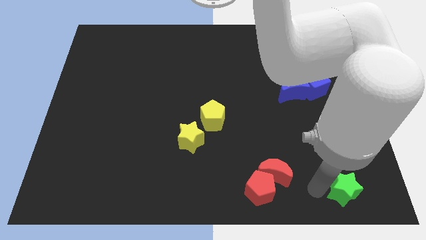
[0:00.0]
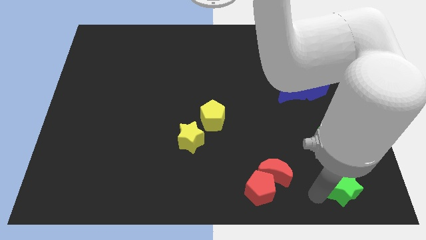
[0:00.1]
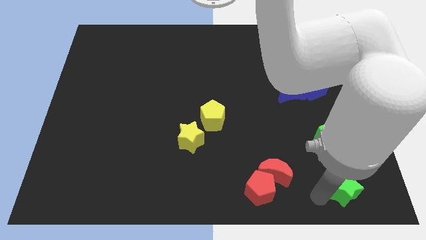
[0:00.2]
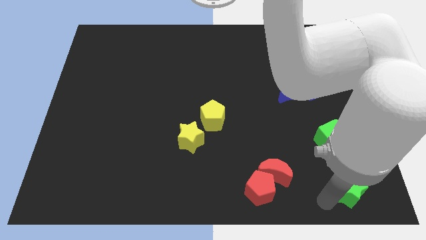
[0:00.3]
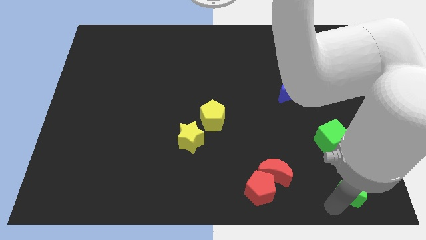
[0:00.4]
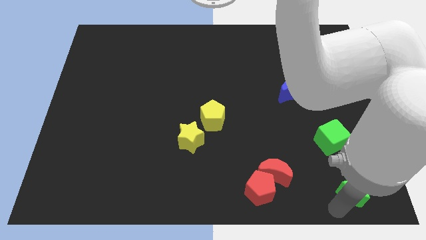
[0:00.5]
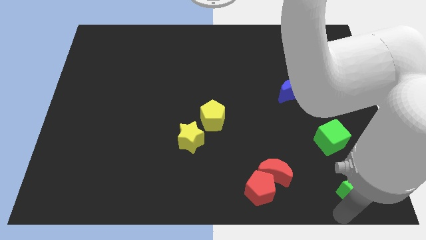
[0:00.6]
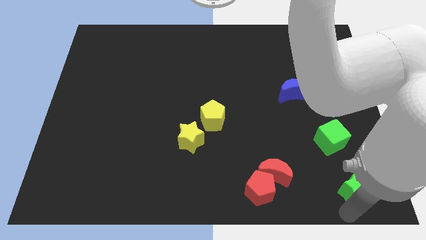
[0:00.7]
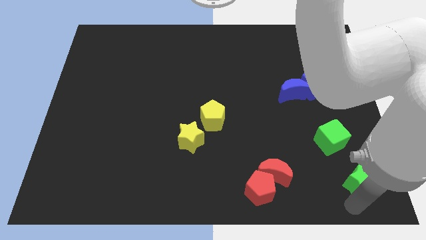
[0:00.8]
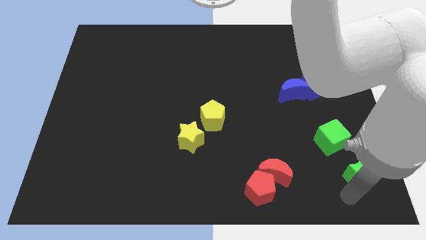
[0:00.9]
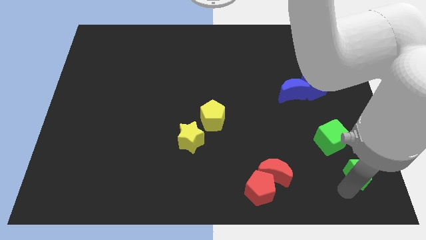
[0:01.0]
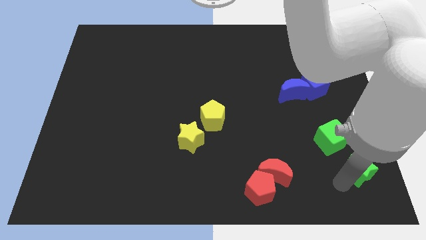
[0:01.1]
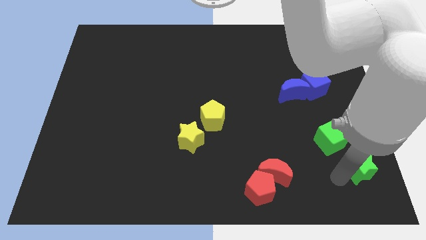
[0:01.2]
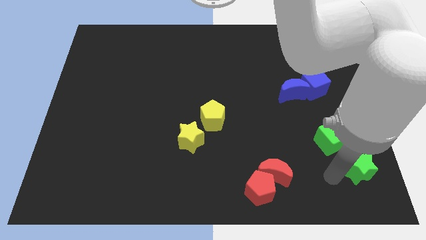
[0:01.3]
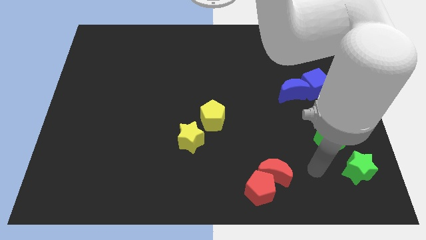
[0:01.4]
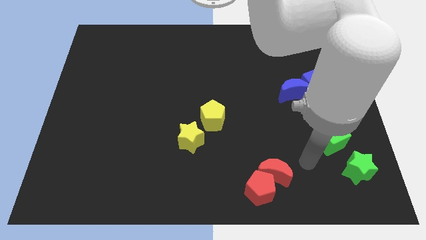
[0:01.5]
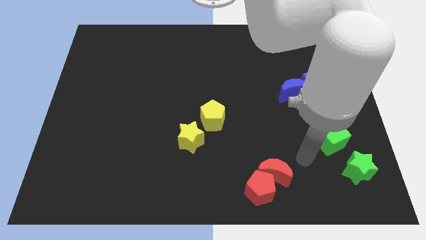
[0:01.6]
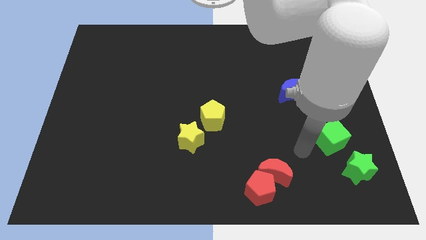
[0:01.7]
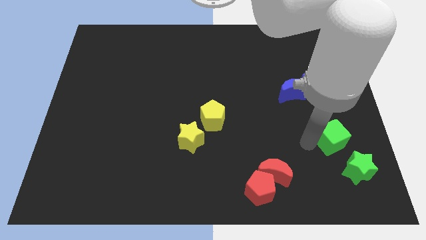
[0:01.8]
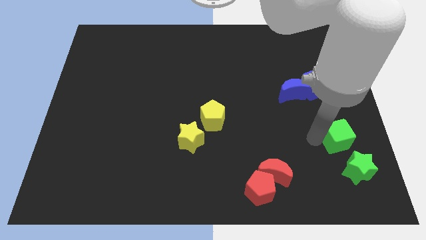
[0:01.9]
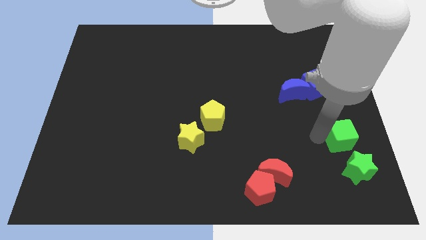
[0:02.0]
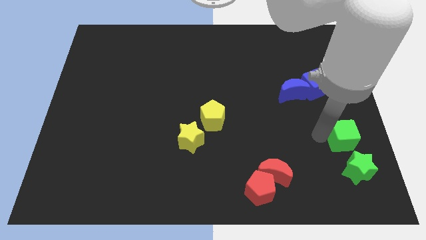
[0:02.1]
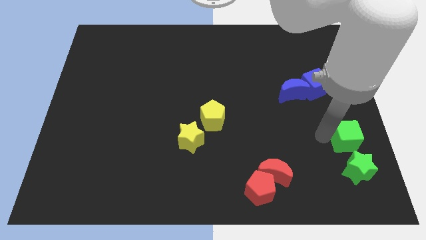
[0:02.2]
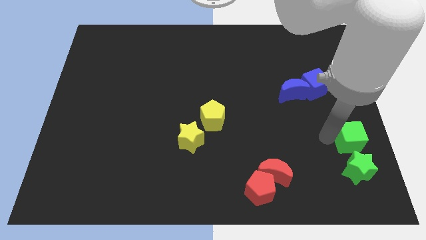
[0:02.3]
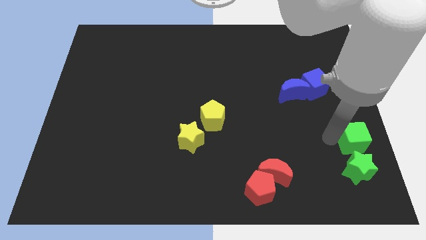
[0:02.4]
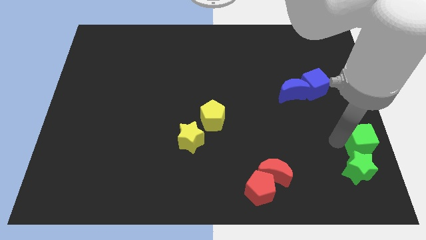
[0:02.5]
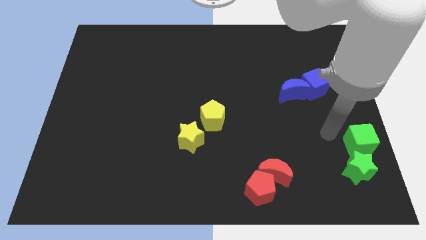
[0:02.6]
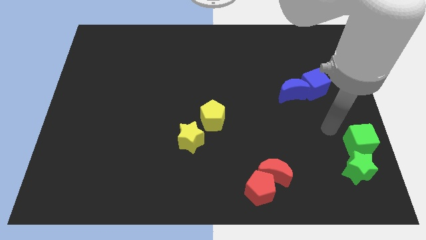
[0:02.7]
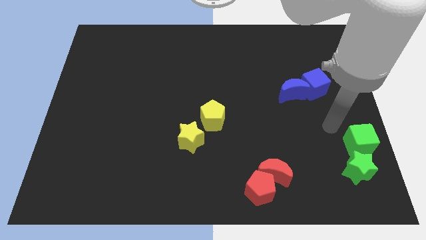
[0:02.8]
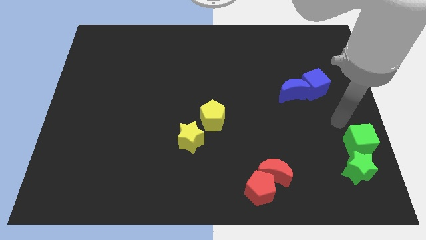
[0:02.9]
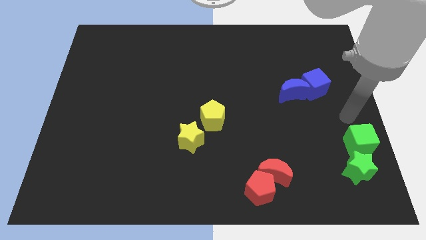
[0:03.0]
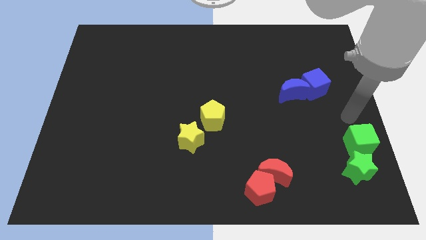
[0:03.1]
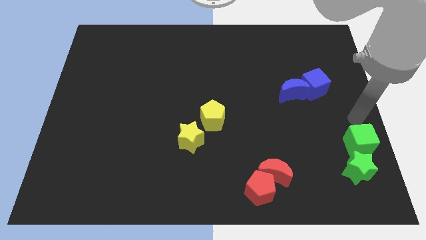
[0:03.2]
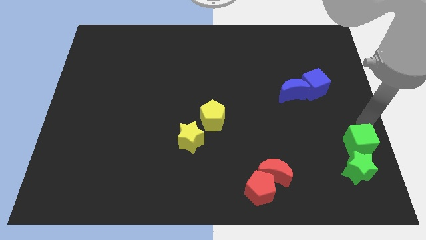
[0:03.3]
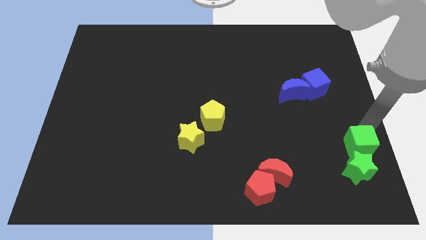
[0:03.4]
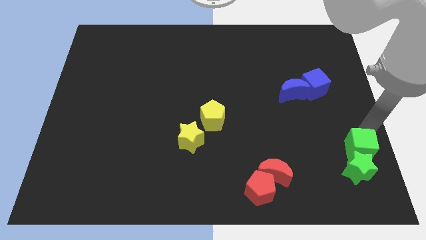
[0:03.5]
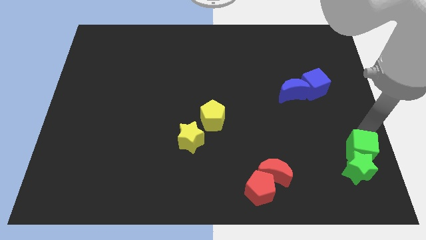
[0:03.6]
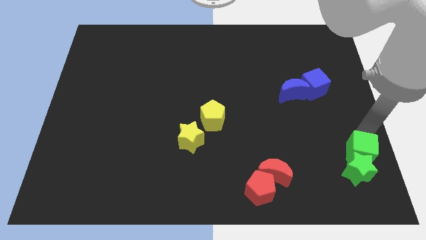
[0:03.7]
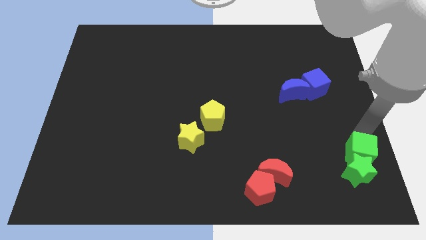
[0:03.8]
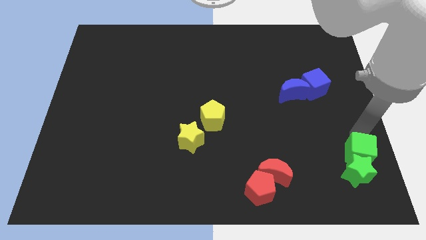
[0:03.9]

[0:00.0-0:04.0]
make a group of green blocks at the right side of the group of red blocks

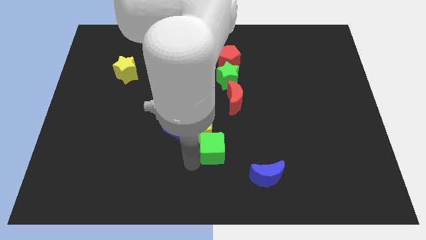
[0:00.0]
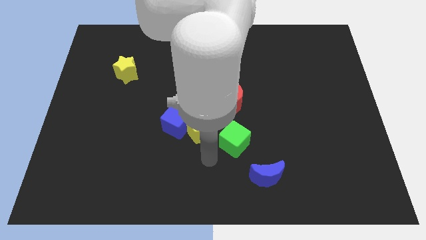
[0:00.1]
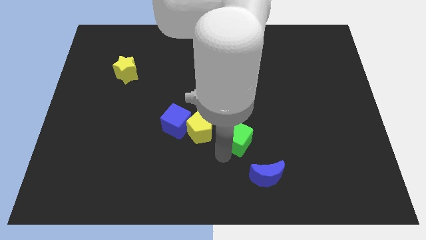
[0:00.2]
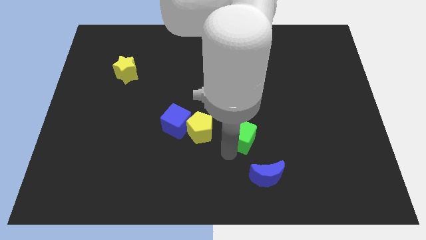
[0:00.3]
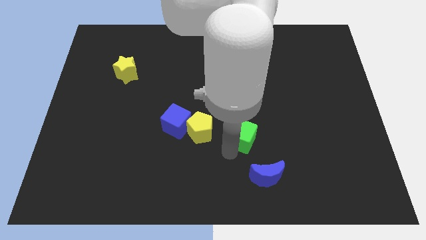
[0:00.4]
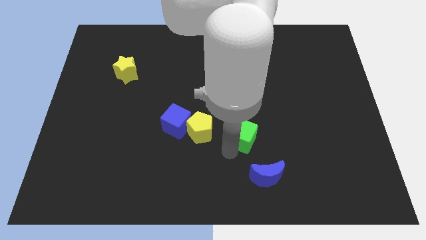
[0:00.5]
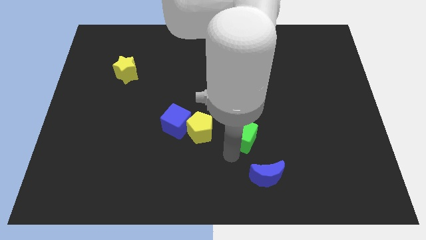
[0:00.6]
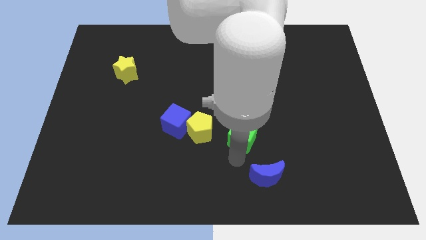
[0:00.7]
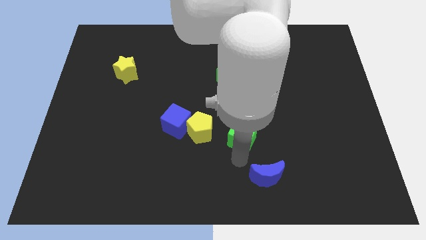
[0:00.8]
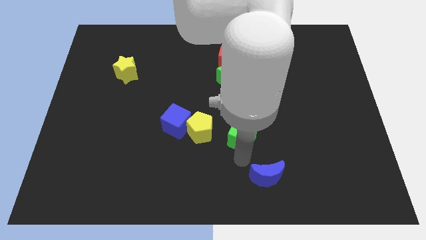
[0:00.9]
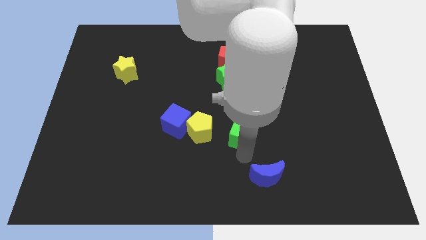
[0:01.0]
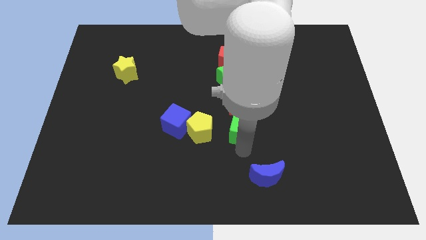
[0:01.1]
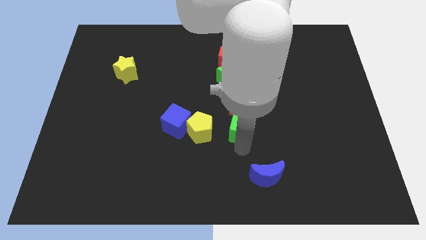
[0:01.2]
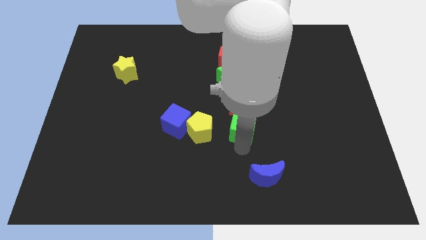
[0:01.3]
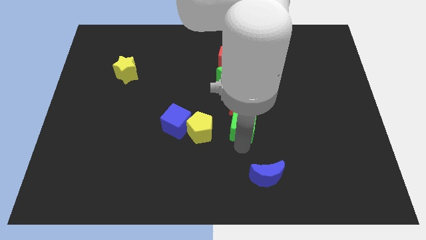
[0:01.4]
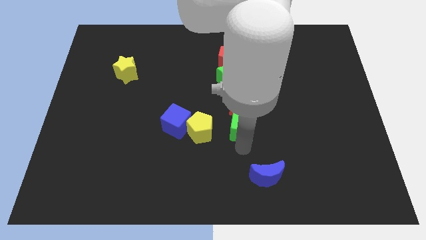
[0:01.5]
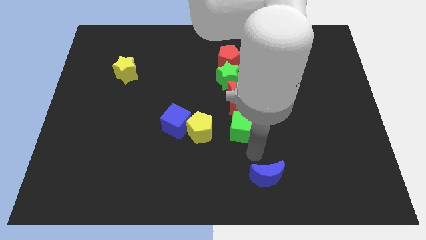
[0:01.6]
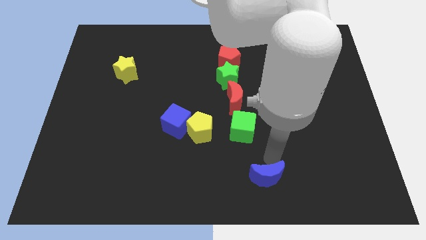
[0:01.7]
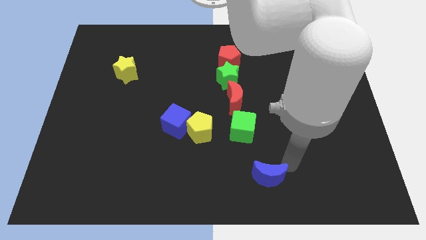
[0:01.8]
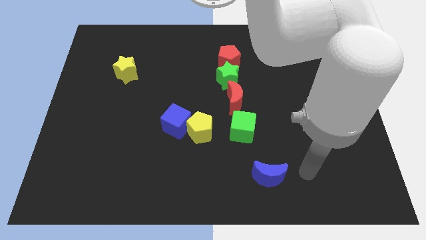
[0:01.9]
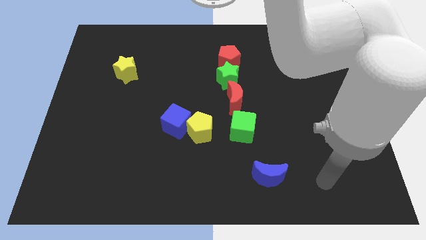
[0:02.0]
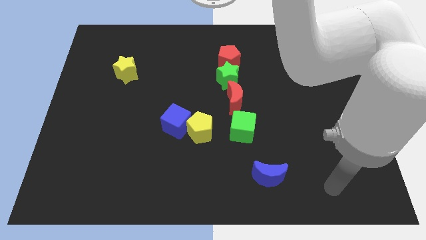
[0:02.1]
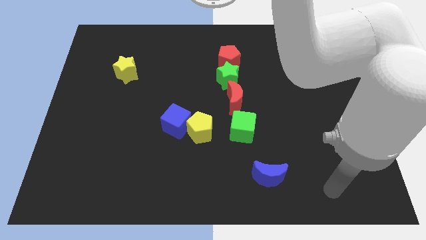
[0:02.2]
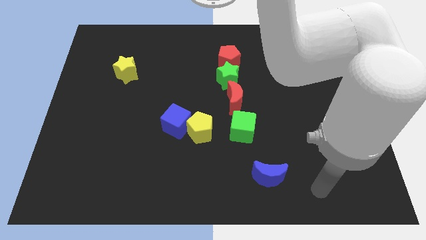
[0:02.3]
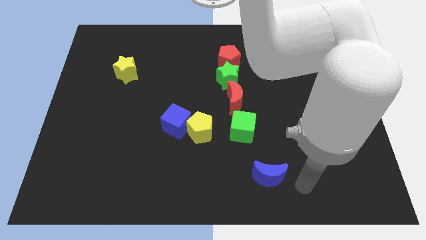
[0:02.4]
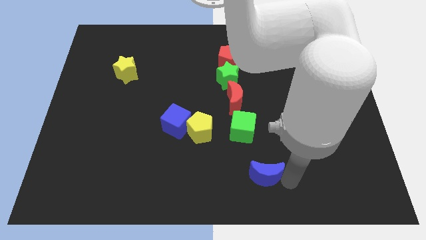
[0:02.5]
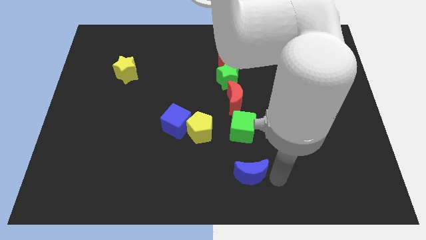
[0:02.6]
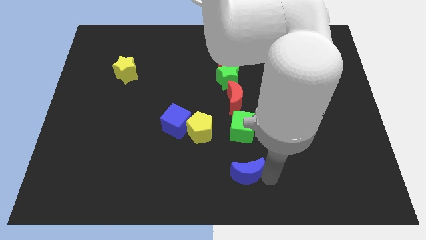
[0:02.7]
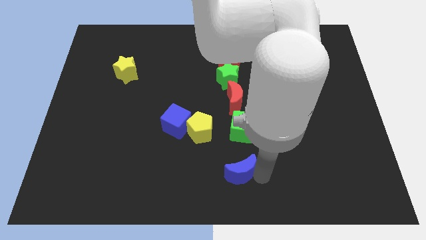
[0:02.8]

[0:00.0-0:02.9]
push blue crescent below green cube

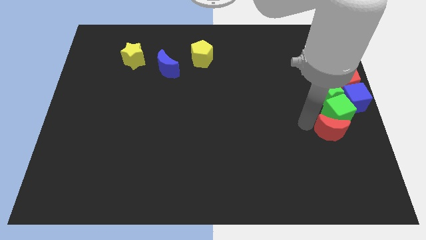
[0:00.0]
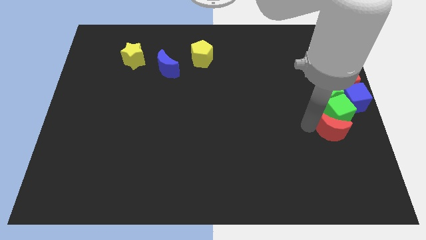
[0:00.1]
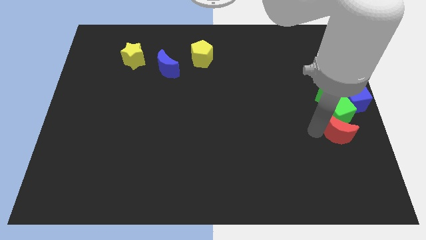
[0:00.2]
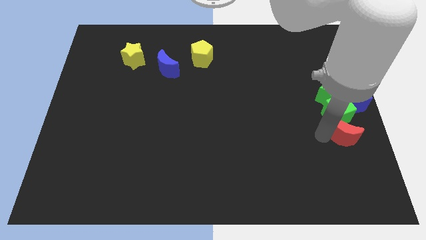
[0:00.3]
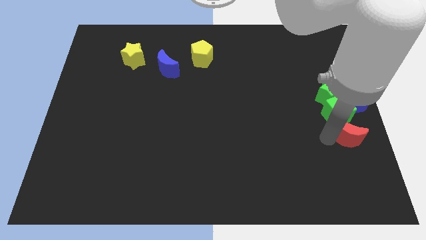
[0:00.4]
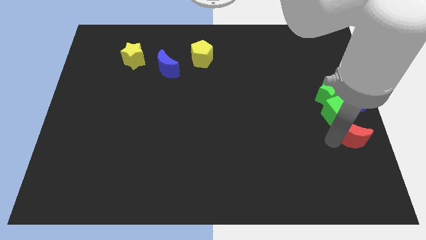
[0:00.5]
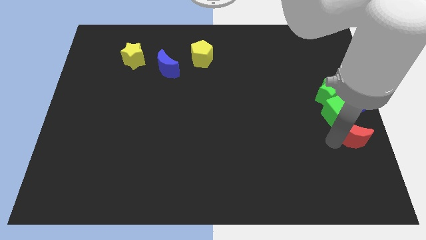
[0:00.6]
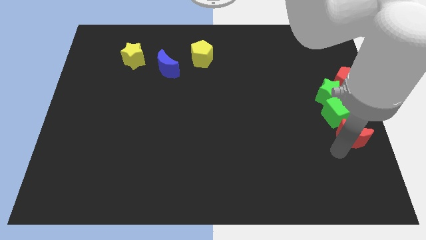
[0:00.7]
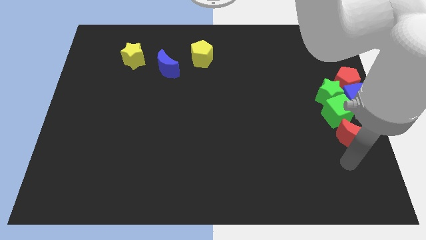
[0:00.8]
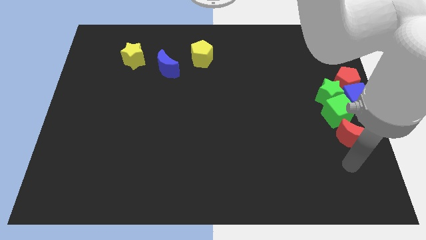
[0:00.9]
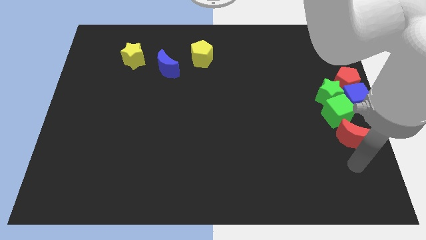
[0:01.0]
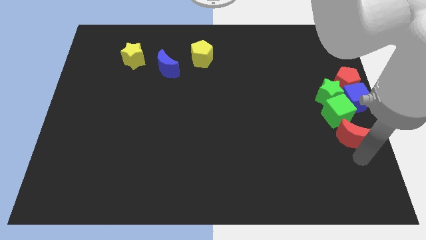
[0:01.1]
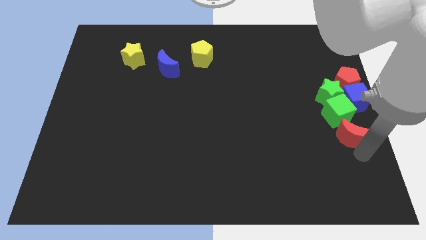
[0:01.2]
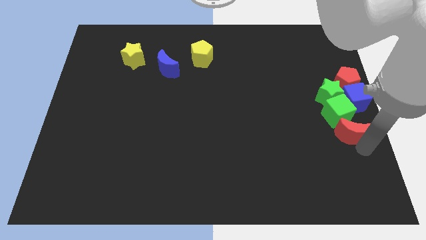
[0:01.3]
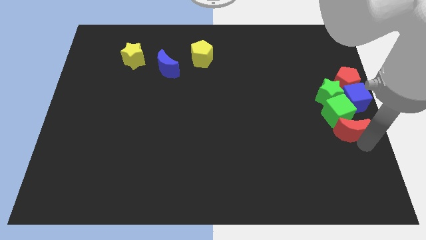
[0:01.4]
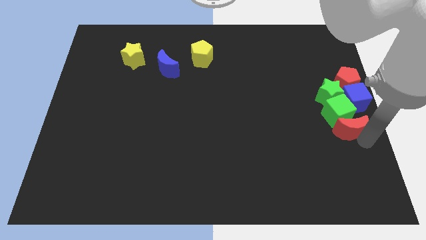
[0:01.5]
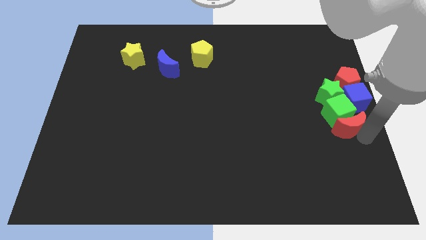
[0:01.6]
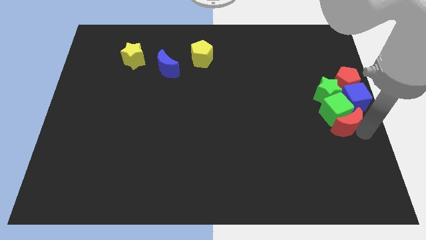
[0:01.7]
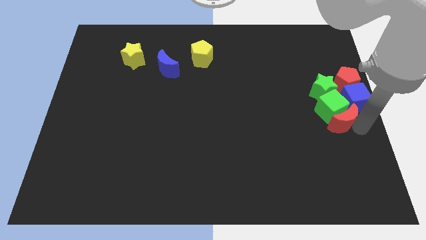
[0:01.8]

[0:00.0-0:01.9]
push the red crescent into the green cube

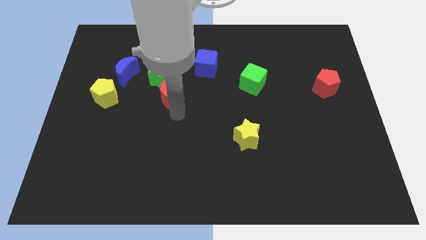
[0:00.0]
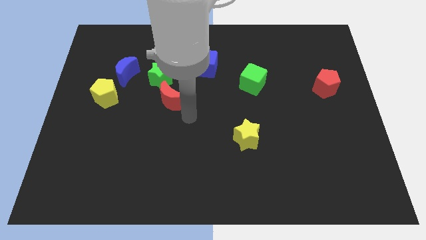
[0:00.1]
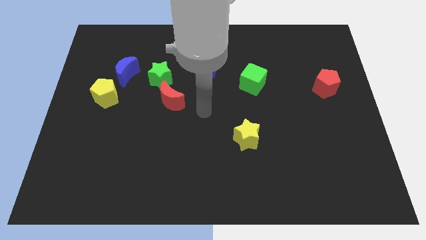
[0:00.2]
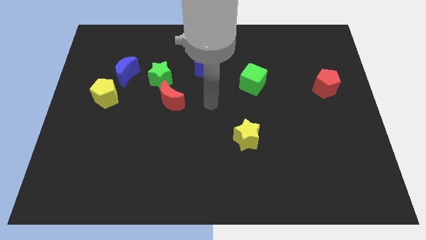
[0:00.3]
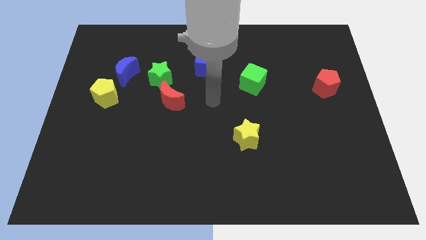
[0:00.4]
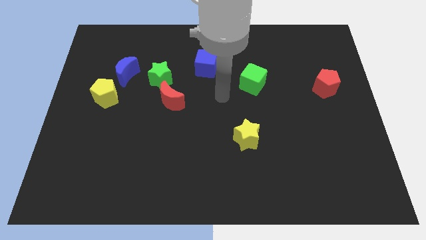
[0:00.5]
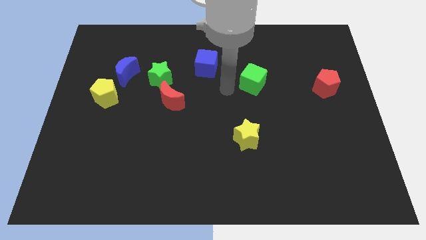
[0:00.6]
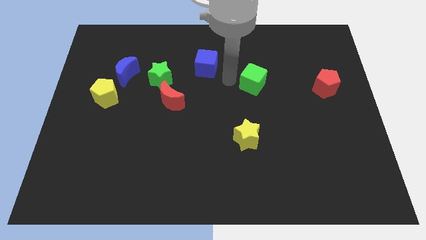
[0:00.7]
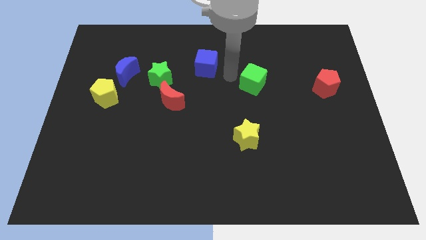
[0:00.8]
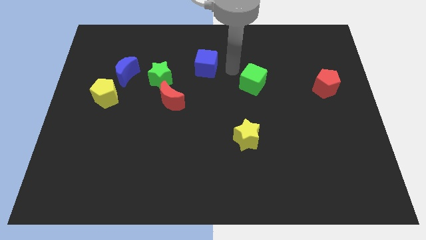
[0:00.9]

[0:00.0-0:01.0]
place the arm in between blue cube and green cube
